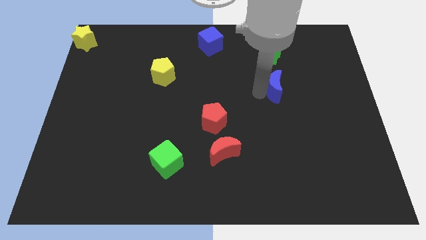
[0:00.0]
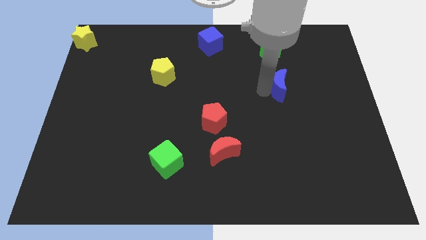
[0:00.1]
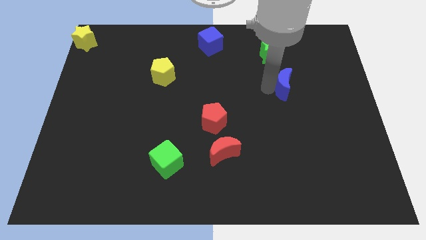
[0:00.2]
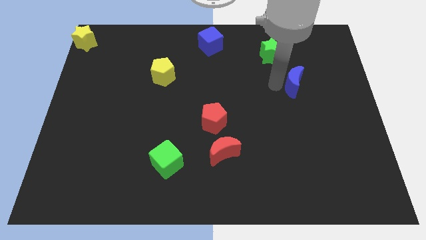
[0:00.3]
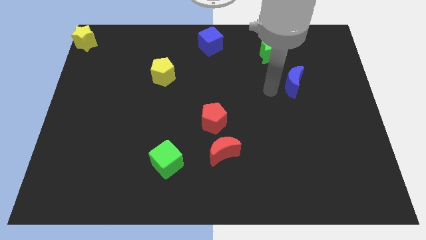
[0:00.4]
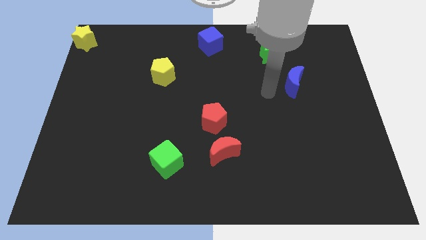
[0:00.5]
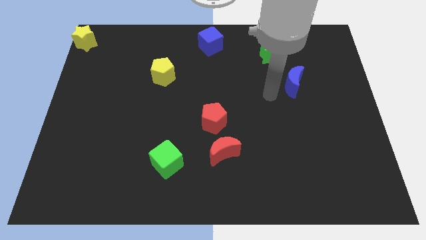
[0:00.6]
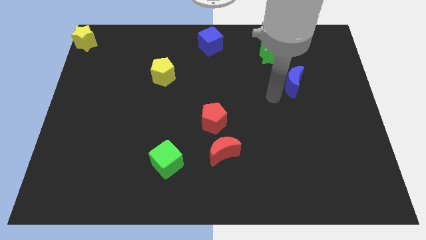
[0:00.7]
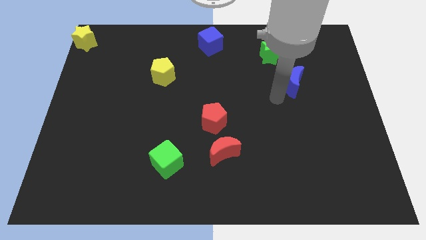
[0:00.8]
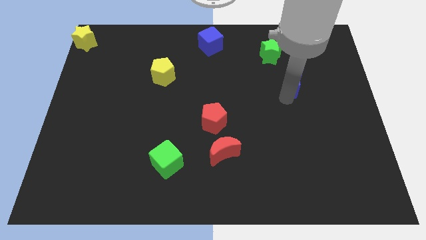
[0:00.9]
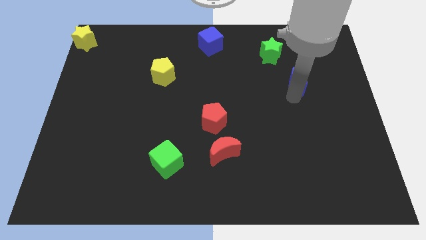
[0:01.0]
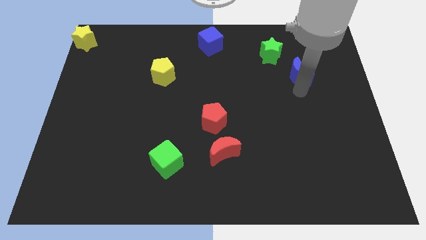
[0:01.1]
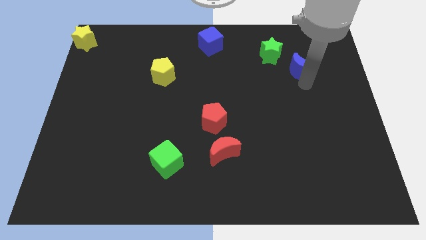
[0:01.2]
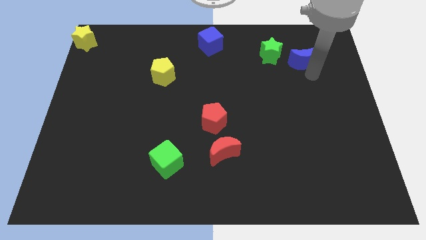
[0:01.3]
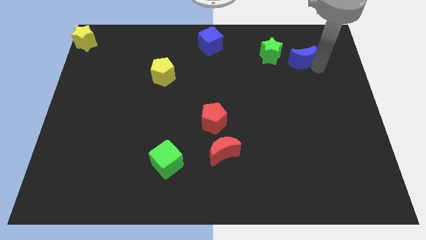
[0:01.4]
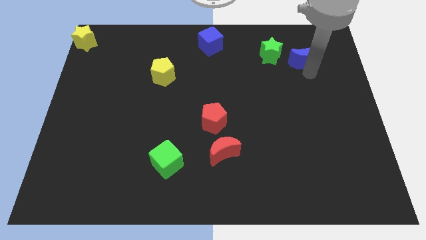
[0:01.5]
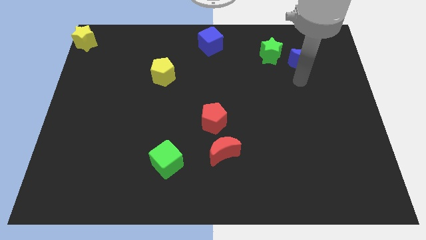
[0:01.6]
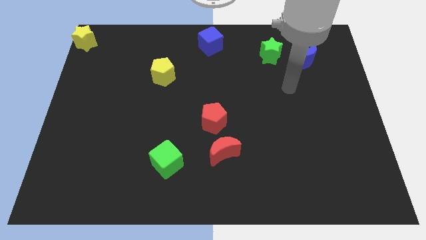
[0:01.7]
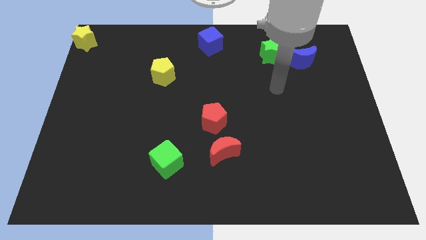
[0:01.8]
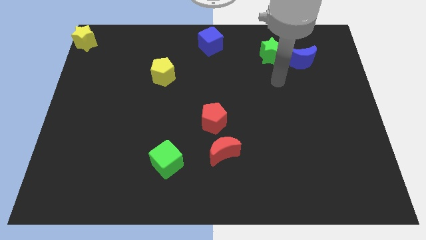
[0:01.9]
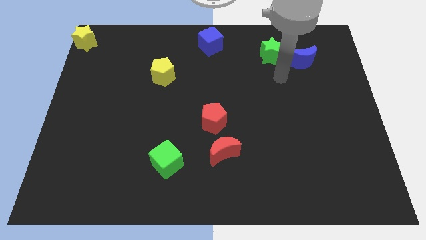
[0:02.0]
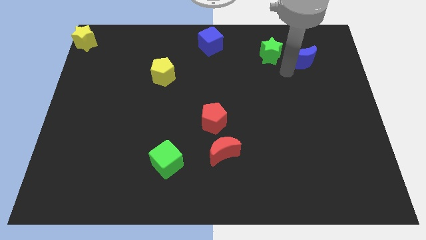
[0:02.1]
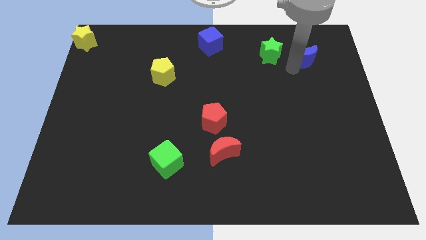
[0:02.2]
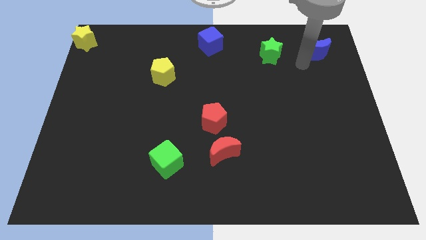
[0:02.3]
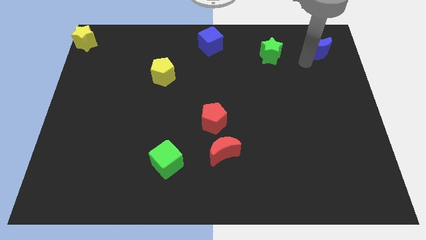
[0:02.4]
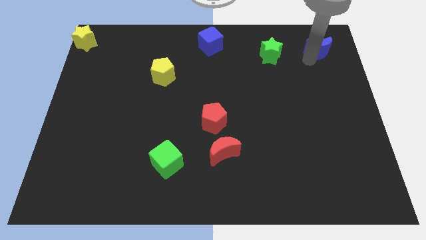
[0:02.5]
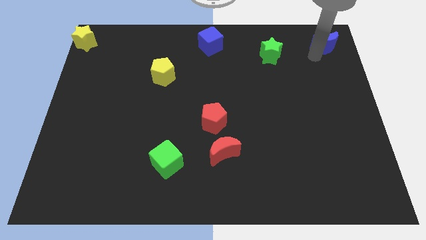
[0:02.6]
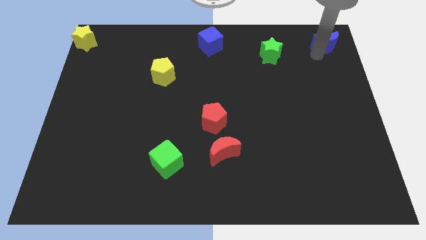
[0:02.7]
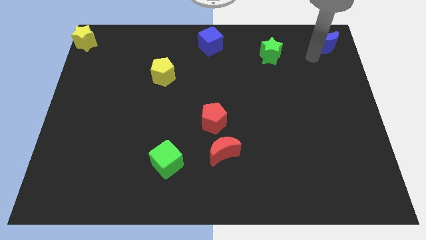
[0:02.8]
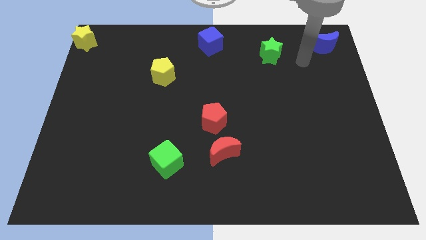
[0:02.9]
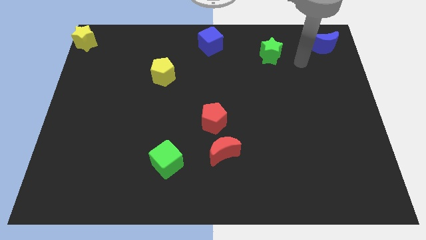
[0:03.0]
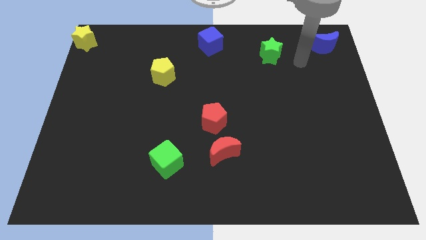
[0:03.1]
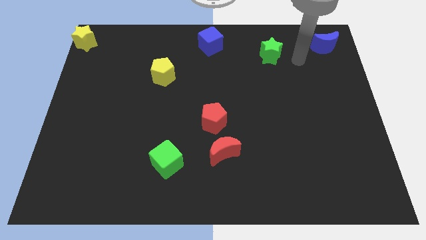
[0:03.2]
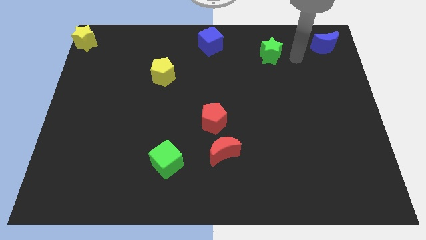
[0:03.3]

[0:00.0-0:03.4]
push the blue crescent to the top right corner of the board

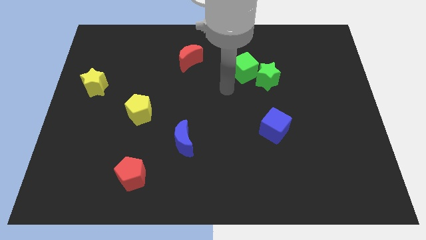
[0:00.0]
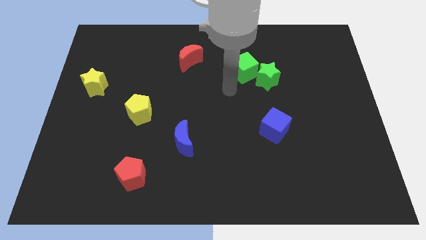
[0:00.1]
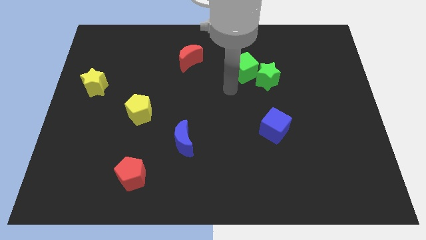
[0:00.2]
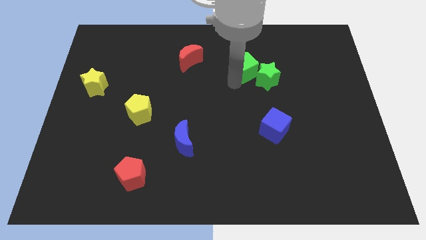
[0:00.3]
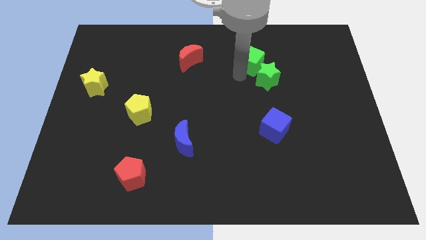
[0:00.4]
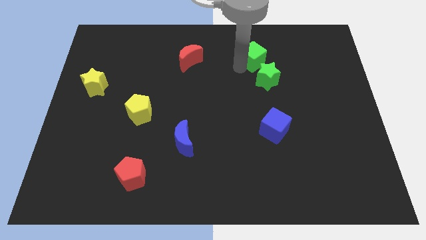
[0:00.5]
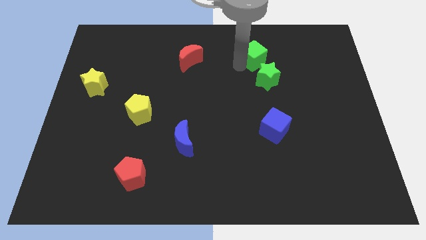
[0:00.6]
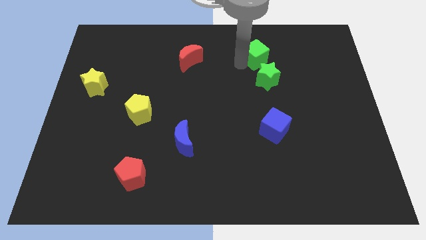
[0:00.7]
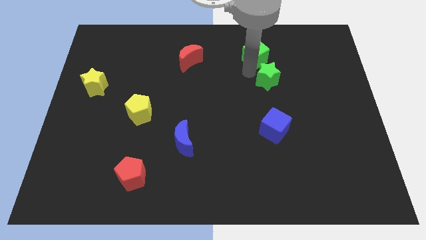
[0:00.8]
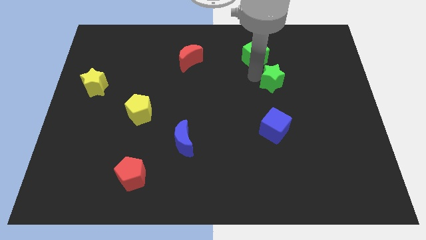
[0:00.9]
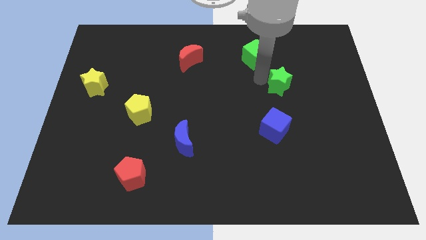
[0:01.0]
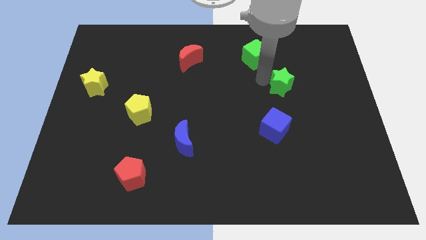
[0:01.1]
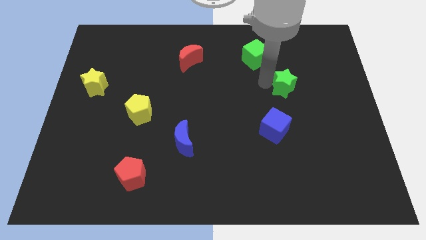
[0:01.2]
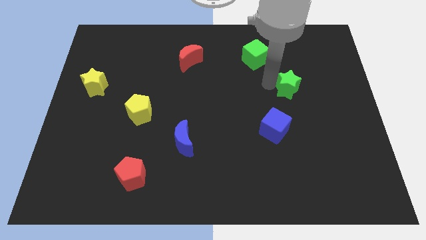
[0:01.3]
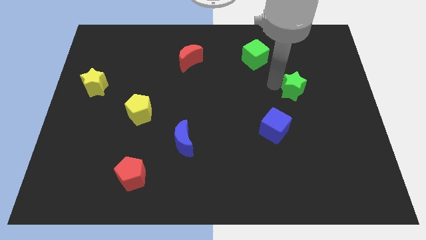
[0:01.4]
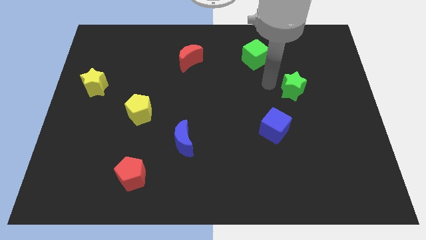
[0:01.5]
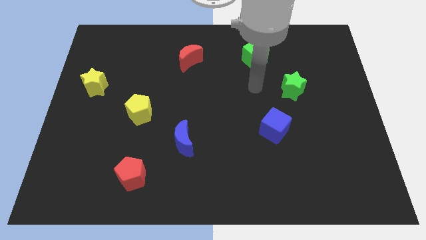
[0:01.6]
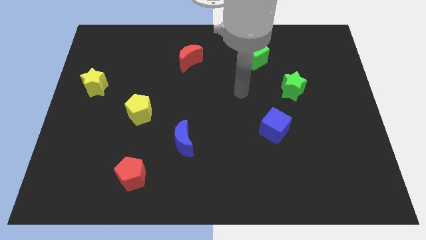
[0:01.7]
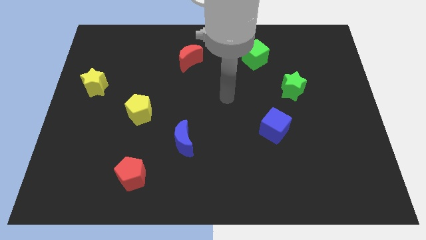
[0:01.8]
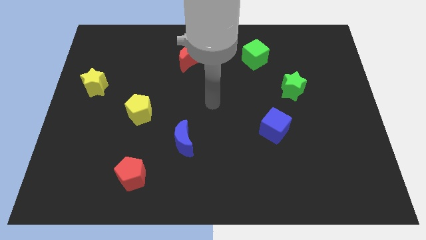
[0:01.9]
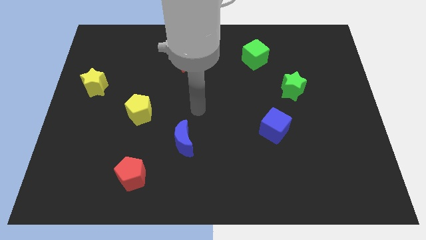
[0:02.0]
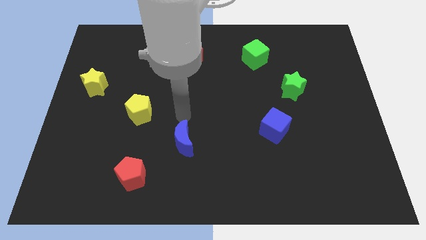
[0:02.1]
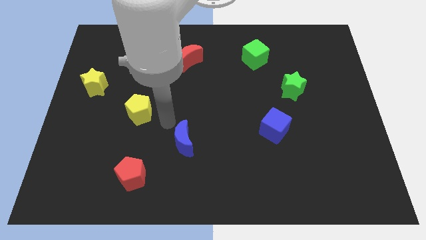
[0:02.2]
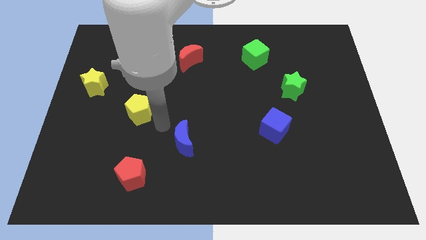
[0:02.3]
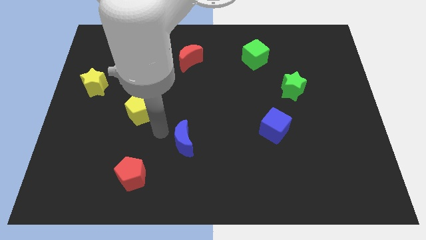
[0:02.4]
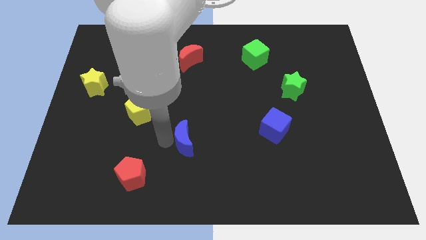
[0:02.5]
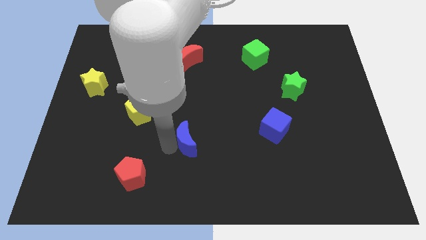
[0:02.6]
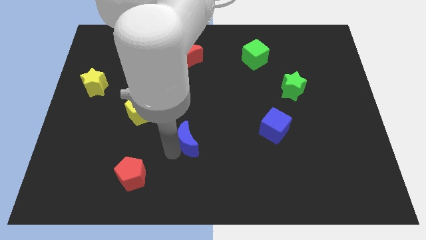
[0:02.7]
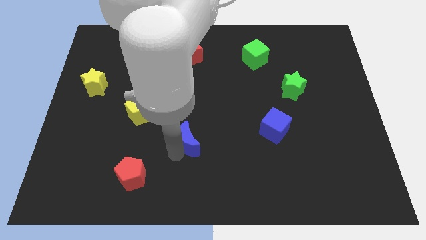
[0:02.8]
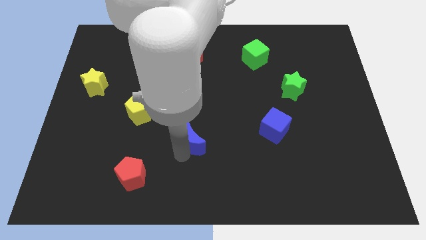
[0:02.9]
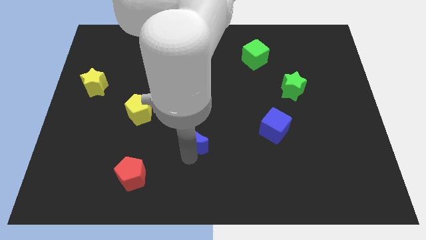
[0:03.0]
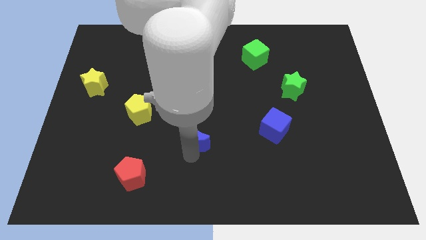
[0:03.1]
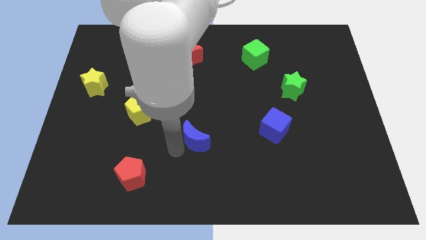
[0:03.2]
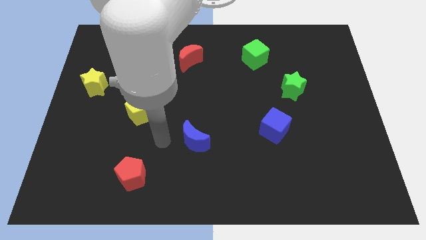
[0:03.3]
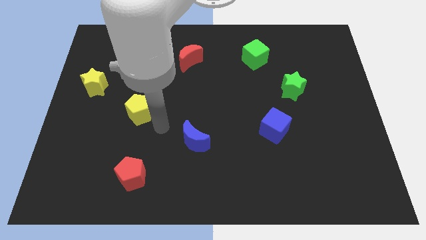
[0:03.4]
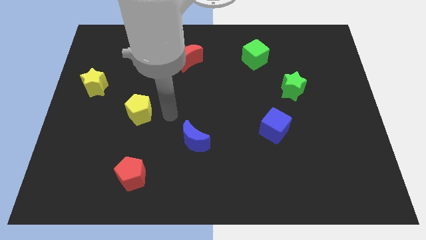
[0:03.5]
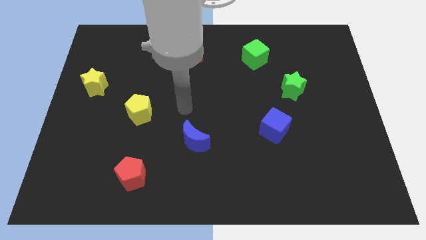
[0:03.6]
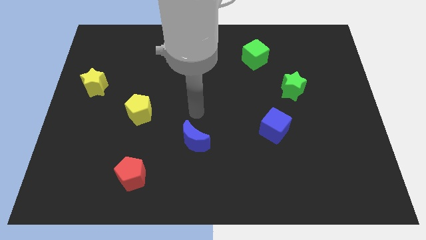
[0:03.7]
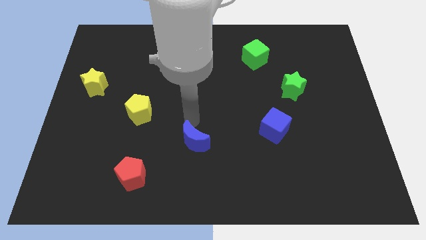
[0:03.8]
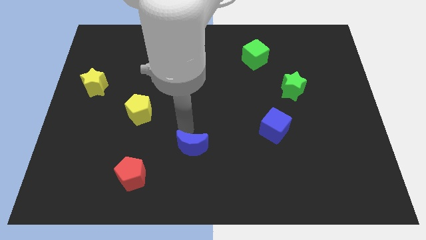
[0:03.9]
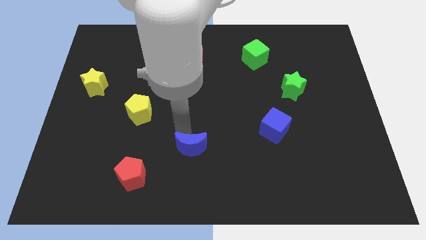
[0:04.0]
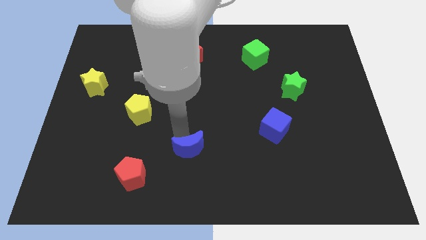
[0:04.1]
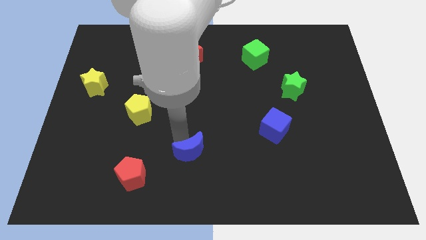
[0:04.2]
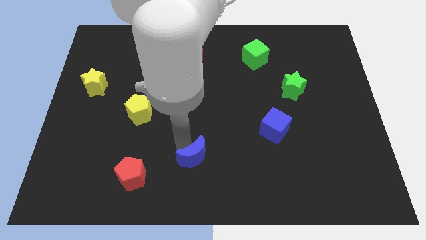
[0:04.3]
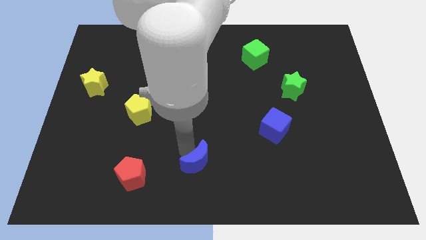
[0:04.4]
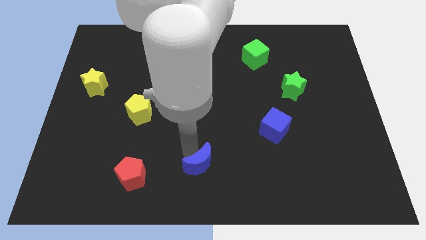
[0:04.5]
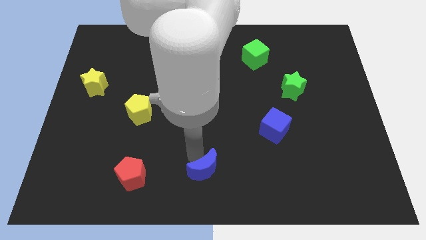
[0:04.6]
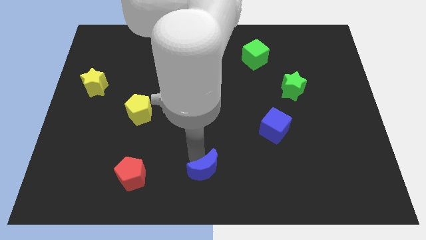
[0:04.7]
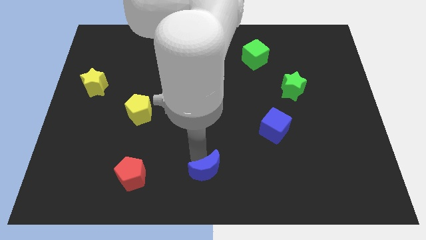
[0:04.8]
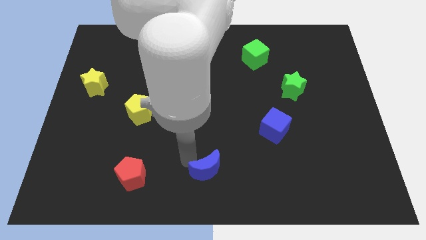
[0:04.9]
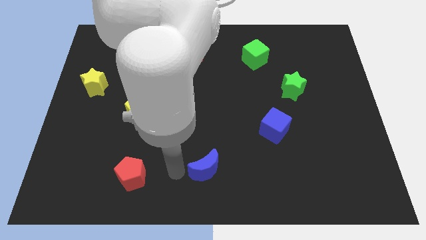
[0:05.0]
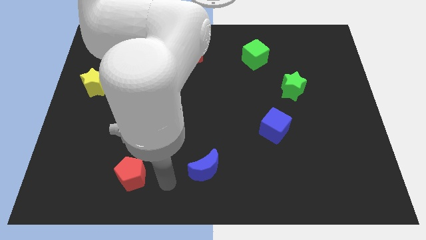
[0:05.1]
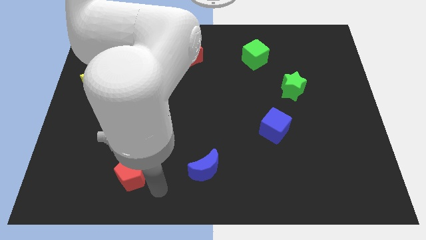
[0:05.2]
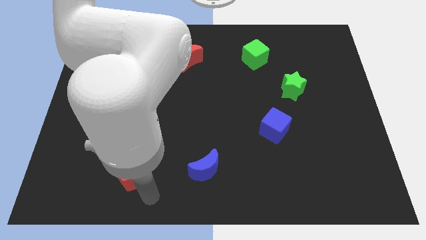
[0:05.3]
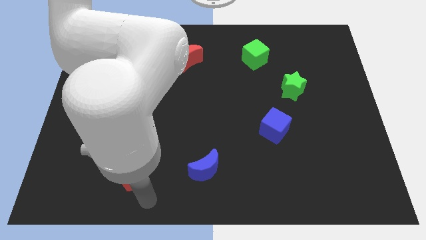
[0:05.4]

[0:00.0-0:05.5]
spread all the blocks all over the board
